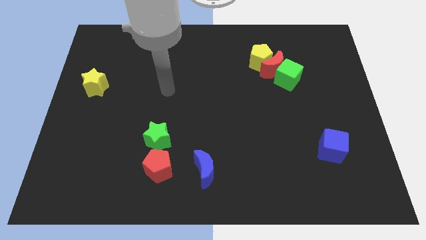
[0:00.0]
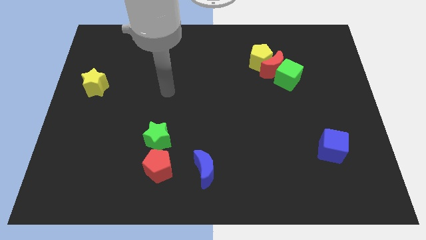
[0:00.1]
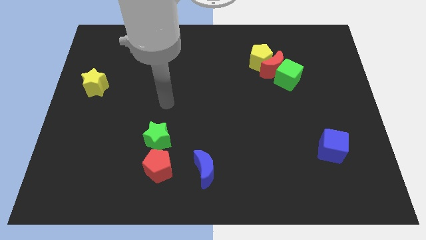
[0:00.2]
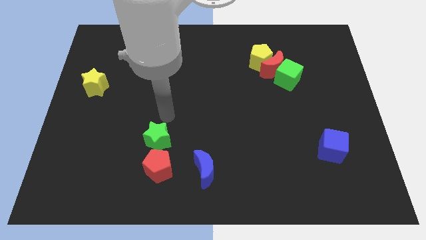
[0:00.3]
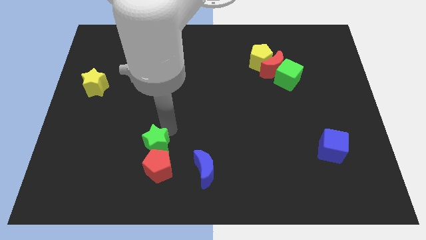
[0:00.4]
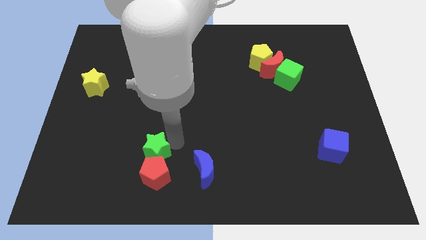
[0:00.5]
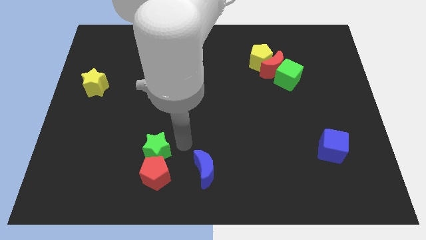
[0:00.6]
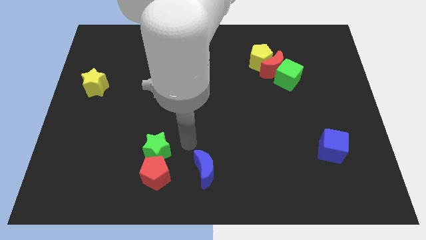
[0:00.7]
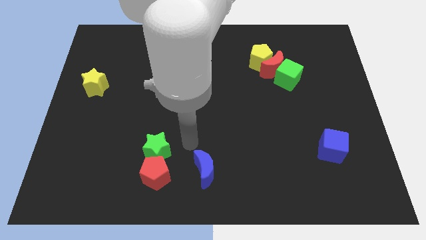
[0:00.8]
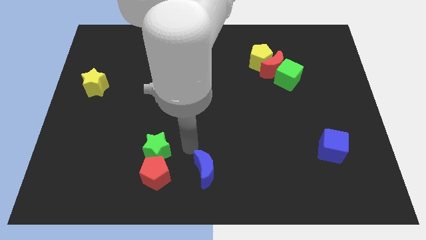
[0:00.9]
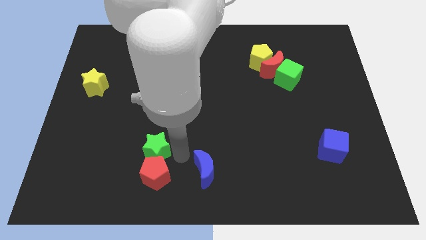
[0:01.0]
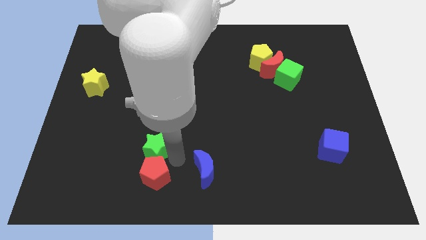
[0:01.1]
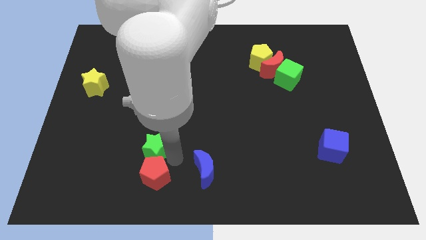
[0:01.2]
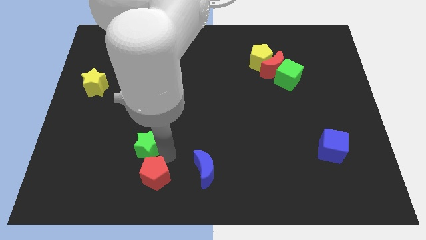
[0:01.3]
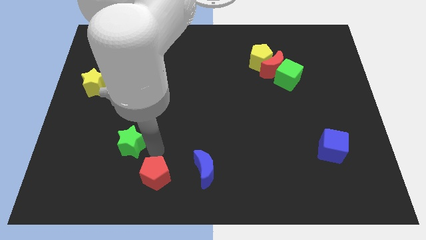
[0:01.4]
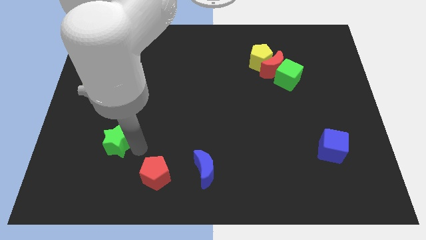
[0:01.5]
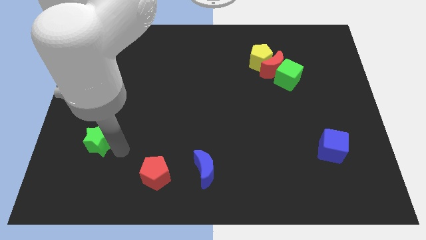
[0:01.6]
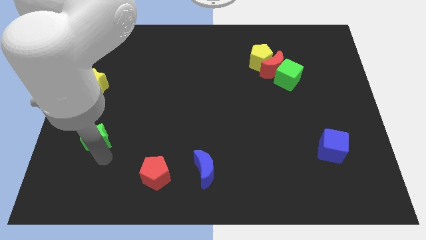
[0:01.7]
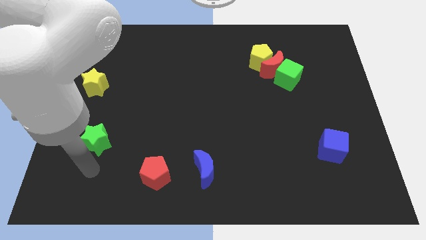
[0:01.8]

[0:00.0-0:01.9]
push the green star below yellow star

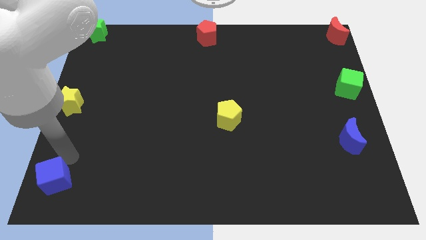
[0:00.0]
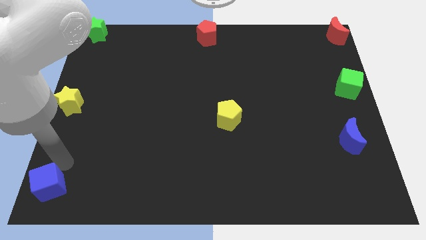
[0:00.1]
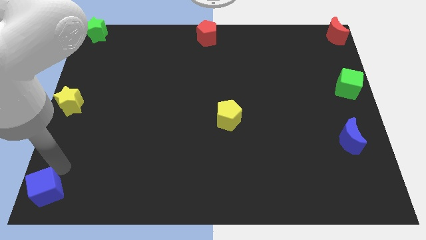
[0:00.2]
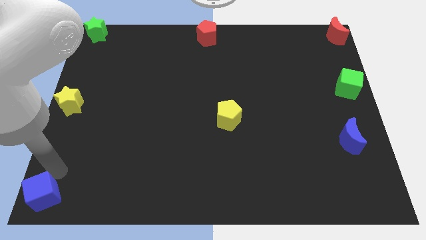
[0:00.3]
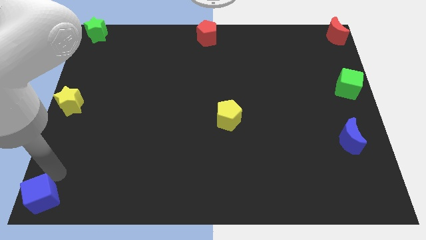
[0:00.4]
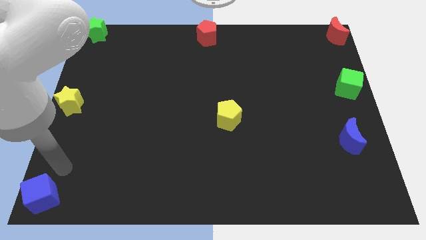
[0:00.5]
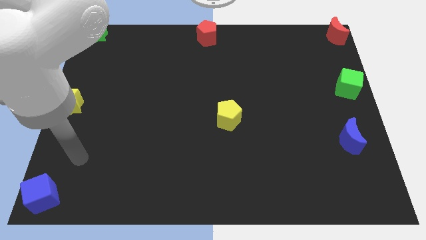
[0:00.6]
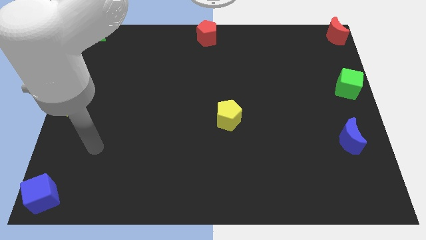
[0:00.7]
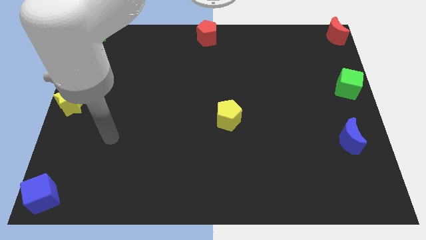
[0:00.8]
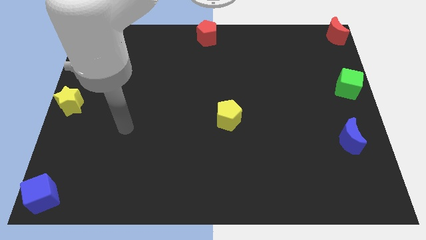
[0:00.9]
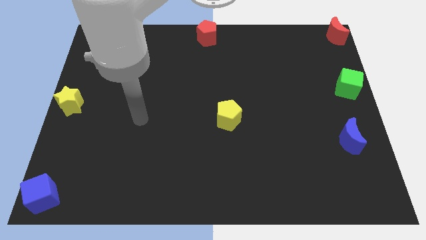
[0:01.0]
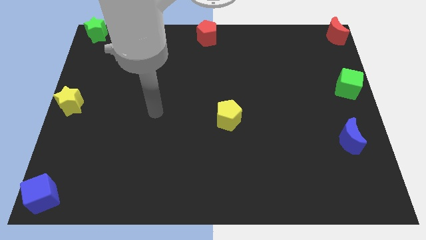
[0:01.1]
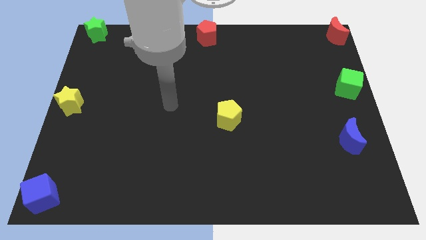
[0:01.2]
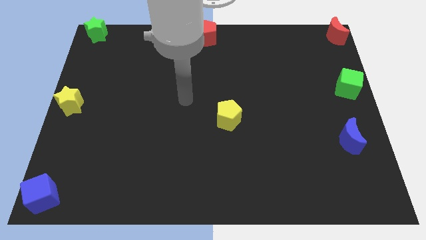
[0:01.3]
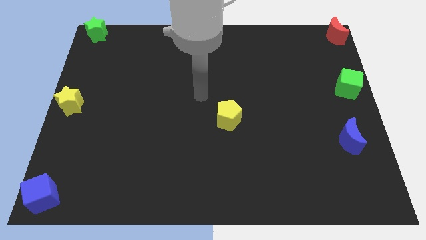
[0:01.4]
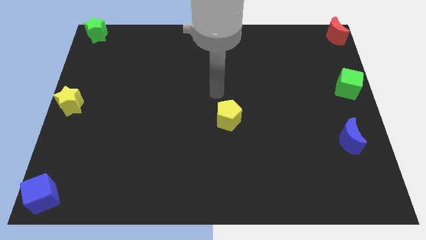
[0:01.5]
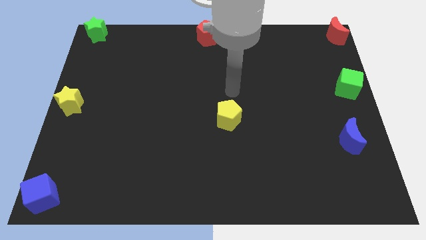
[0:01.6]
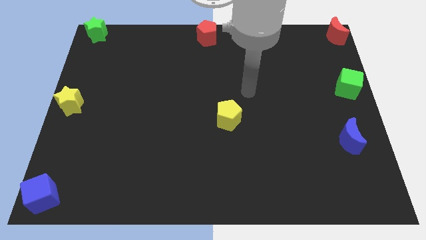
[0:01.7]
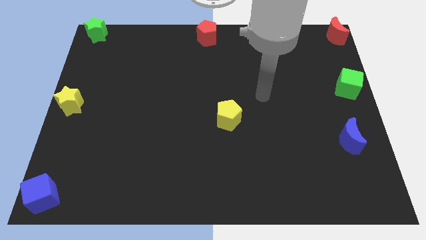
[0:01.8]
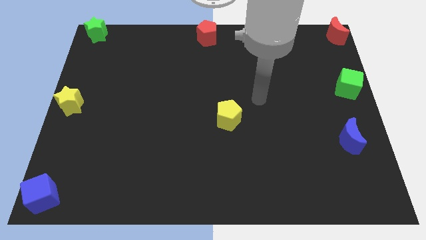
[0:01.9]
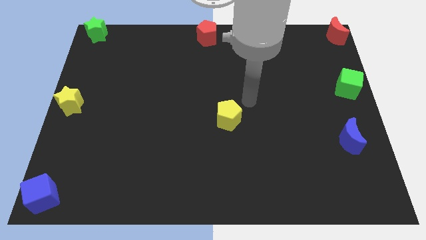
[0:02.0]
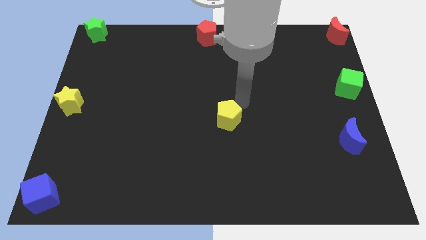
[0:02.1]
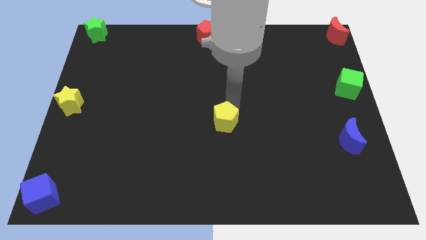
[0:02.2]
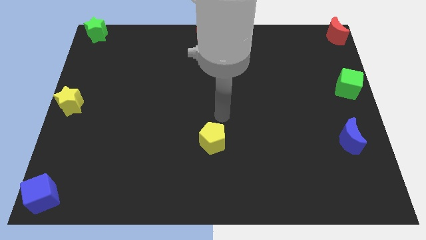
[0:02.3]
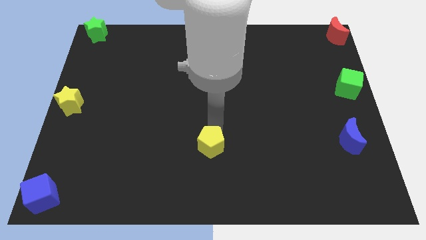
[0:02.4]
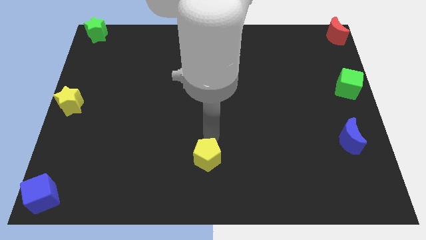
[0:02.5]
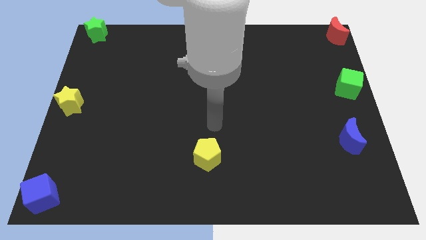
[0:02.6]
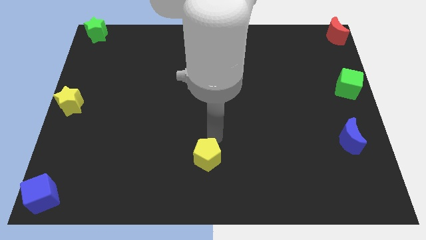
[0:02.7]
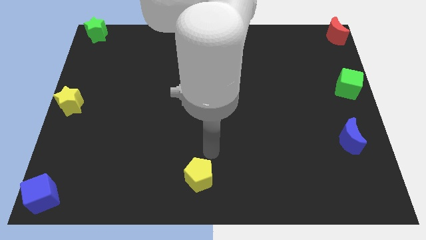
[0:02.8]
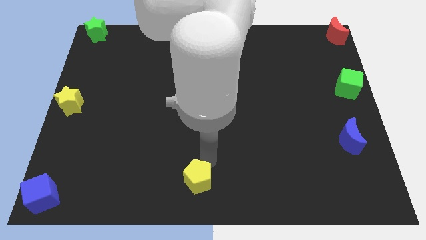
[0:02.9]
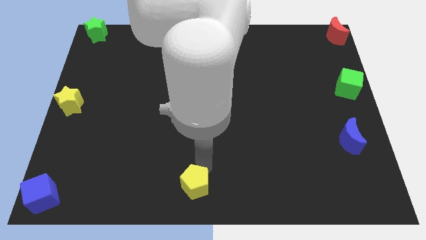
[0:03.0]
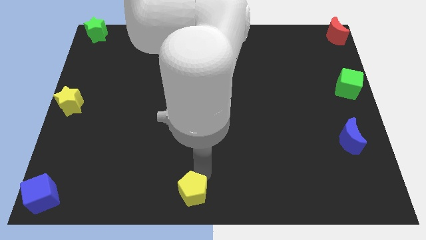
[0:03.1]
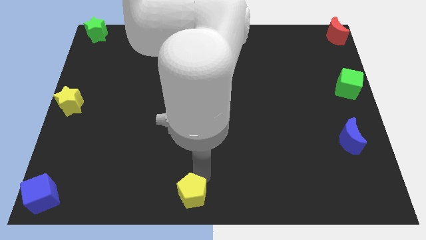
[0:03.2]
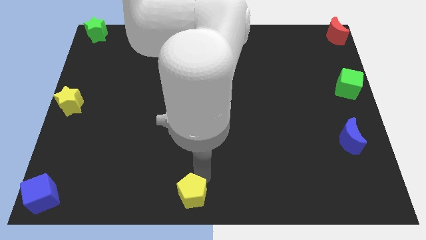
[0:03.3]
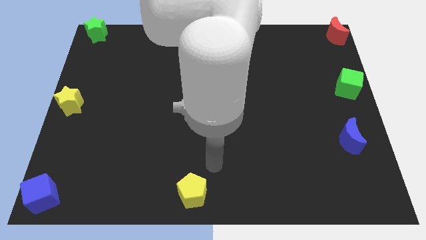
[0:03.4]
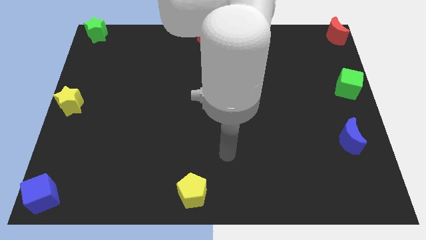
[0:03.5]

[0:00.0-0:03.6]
push yellow pentagon to the bottom center

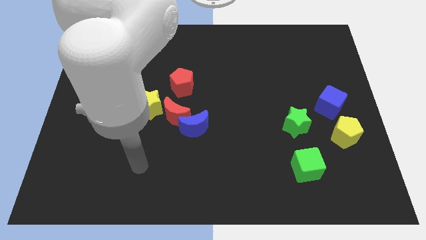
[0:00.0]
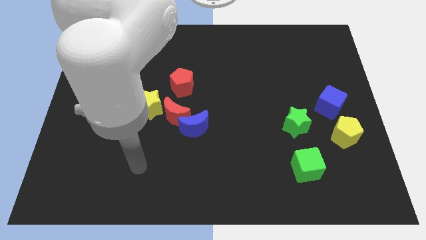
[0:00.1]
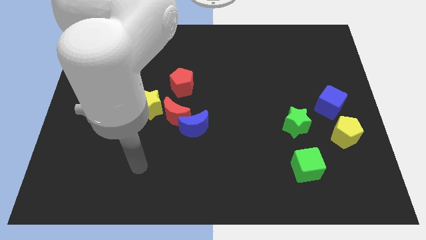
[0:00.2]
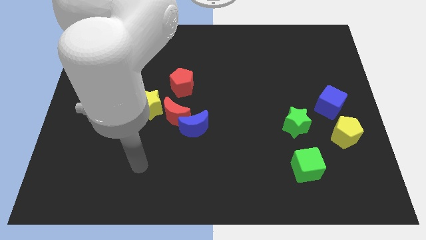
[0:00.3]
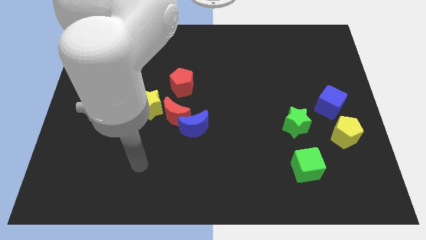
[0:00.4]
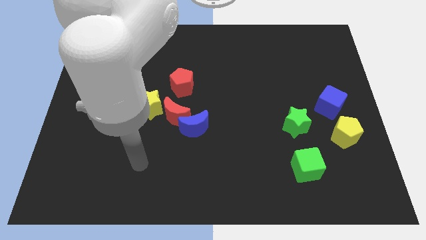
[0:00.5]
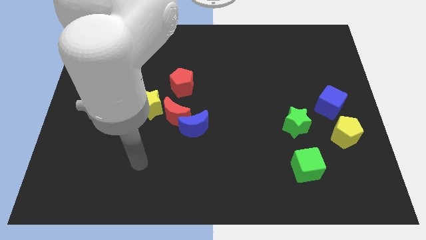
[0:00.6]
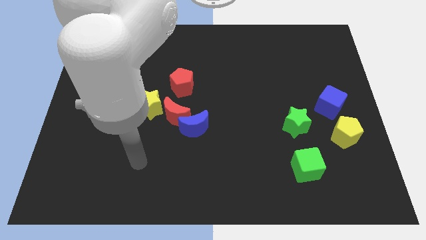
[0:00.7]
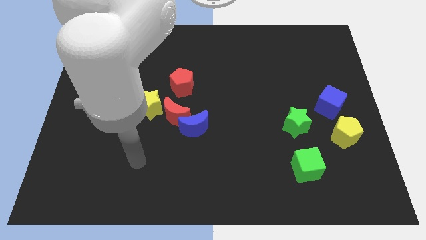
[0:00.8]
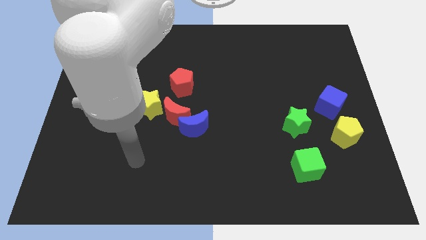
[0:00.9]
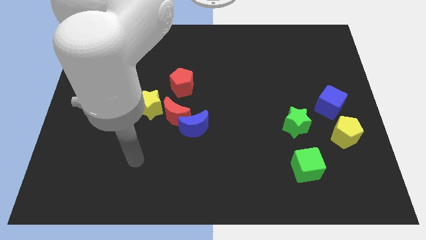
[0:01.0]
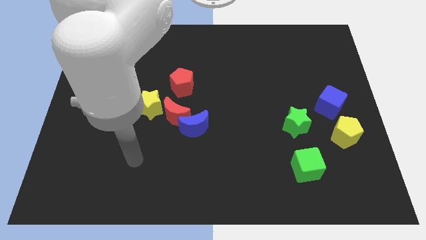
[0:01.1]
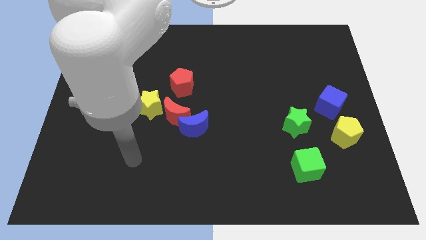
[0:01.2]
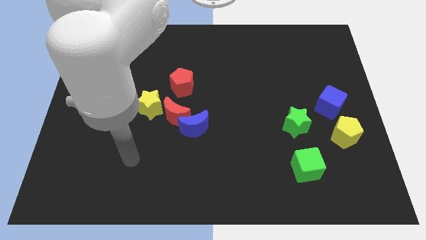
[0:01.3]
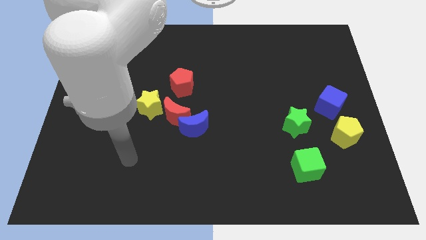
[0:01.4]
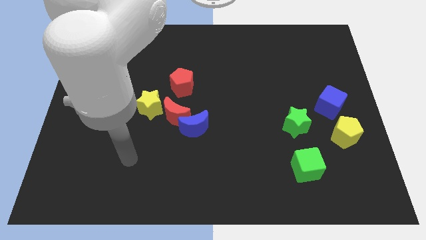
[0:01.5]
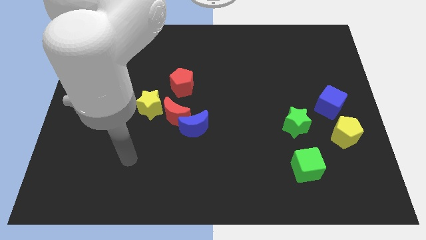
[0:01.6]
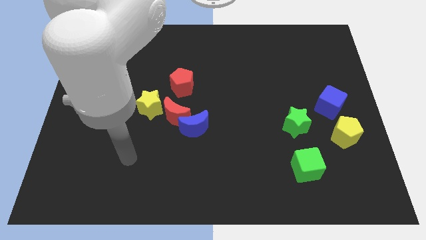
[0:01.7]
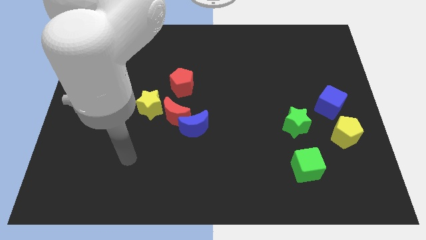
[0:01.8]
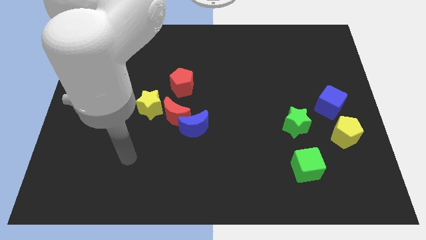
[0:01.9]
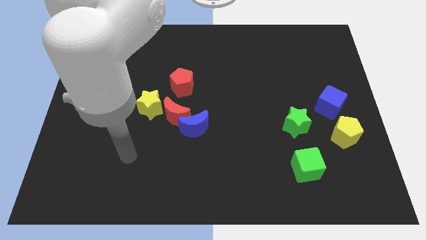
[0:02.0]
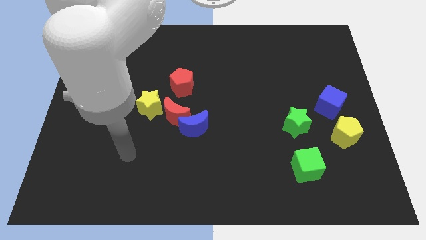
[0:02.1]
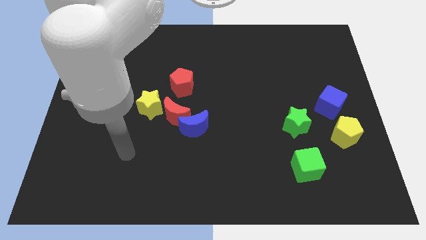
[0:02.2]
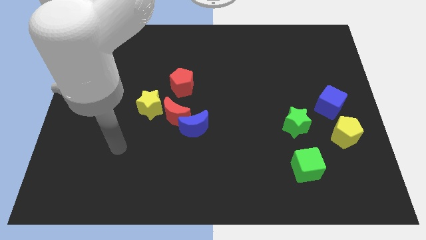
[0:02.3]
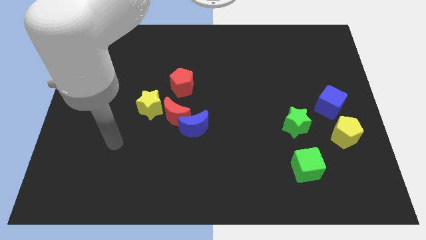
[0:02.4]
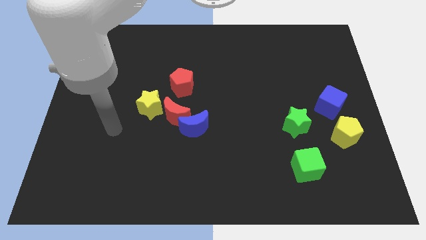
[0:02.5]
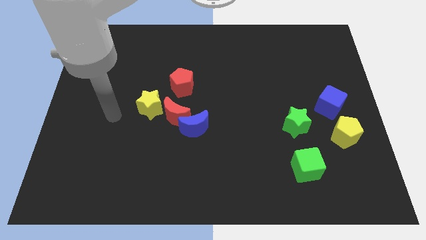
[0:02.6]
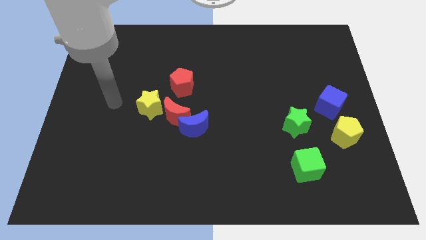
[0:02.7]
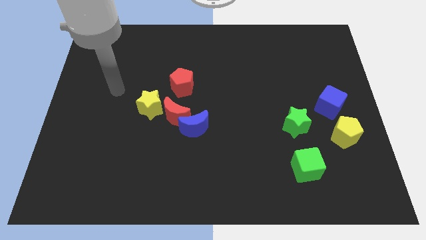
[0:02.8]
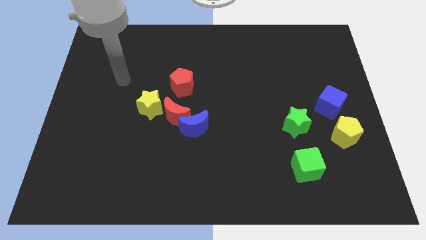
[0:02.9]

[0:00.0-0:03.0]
move your arm towards the top side of the board

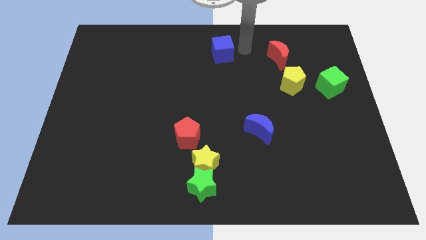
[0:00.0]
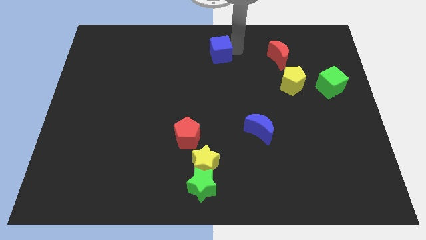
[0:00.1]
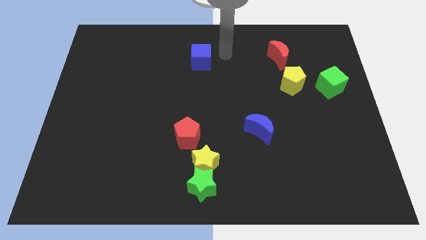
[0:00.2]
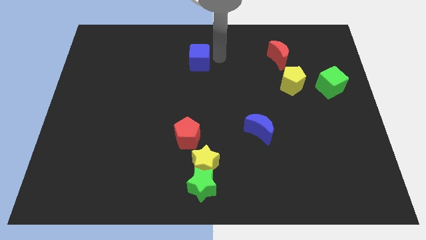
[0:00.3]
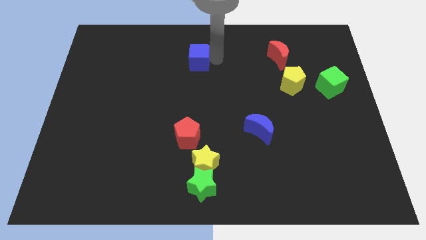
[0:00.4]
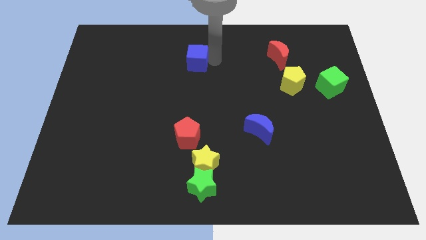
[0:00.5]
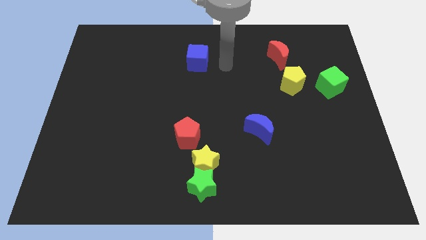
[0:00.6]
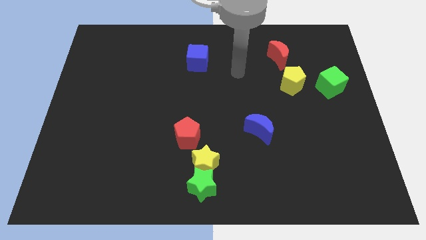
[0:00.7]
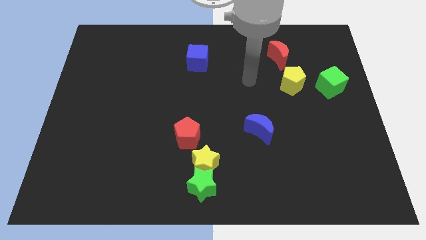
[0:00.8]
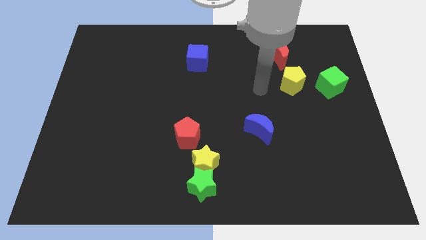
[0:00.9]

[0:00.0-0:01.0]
place the blue cube parallel to red moon
